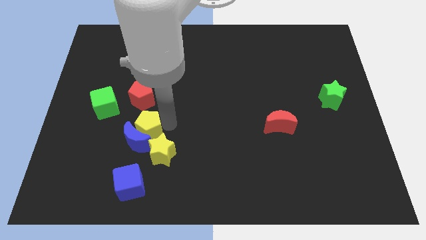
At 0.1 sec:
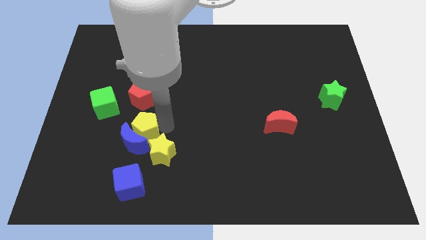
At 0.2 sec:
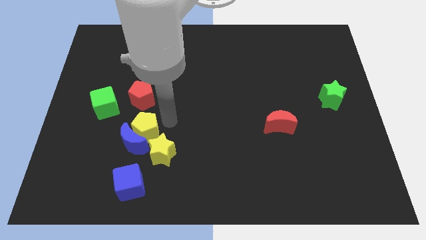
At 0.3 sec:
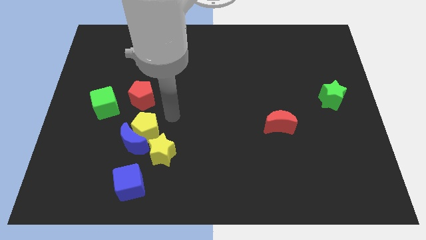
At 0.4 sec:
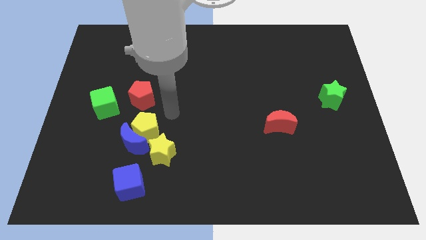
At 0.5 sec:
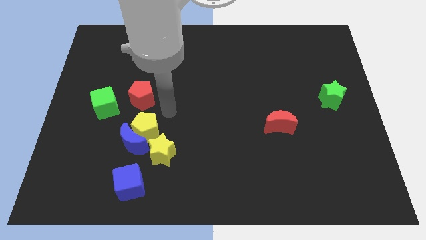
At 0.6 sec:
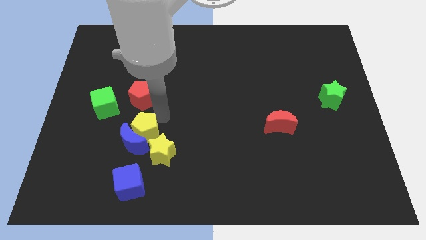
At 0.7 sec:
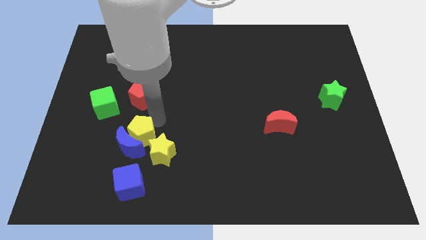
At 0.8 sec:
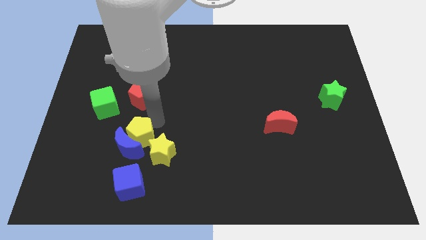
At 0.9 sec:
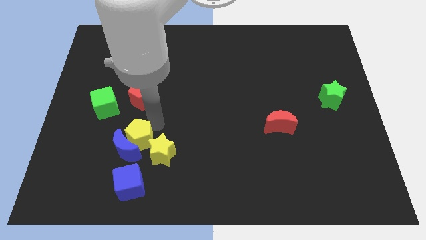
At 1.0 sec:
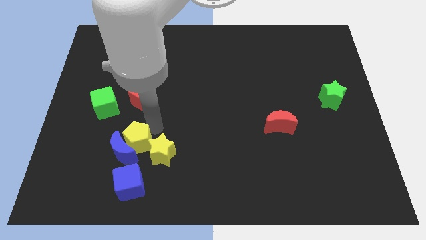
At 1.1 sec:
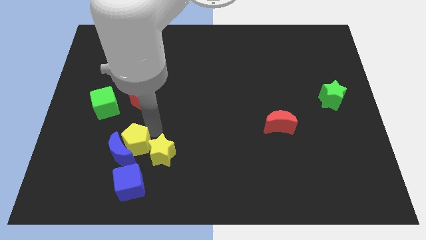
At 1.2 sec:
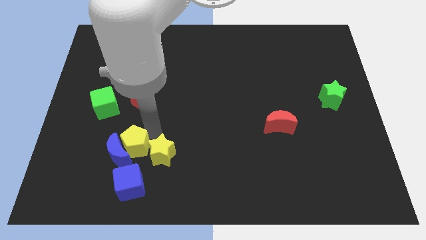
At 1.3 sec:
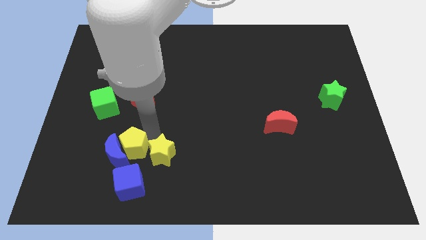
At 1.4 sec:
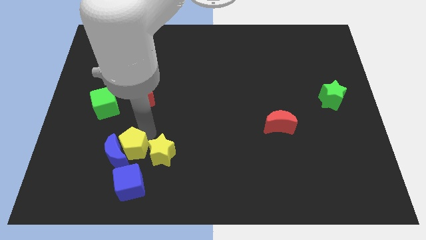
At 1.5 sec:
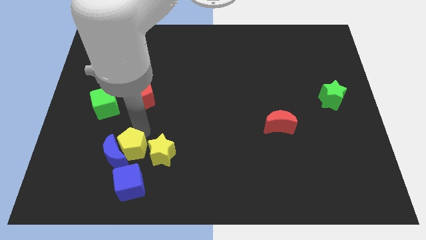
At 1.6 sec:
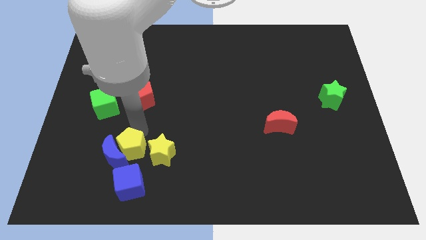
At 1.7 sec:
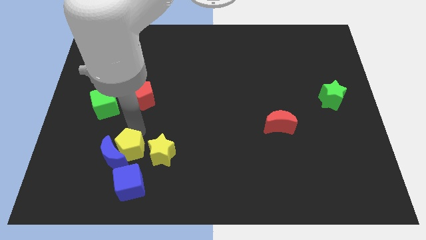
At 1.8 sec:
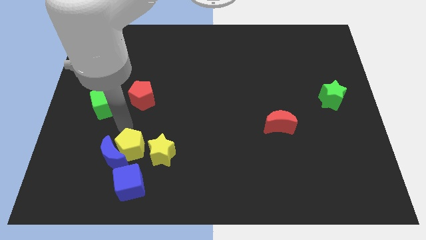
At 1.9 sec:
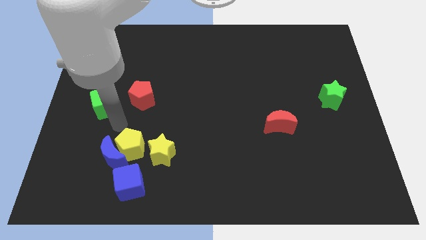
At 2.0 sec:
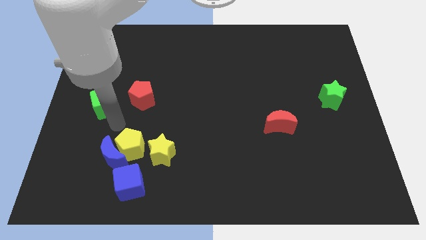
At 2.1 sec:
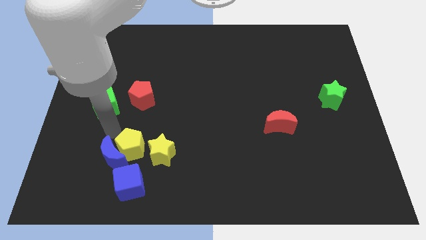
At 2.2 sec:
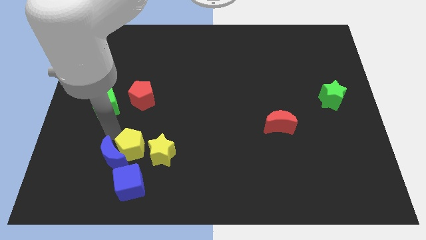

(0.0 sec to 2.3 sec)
place the blue moon and the yellow pentagon on top of blue cube

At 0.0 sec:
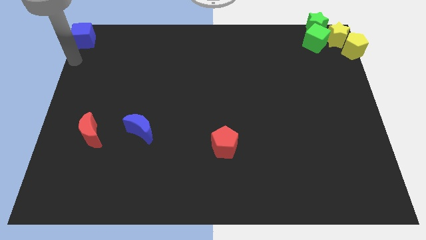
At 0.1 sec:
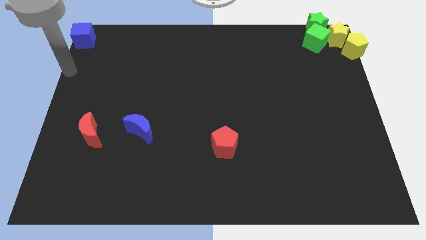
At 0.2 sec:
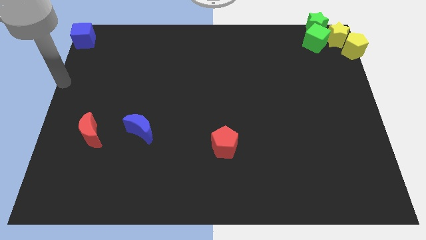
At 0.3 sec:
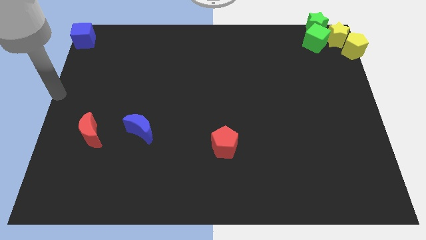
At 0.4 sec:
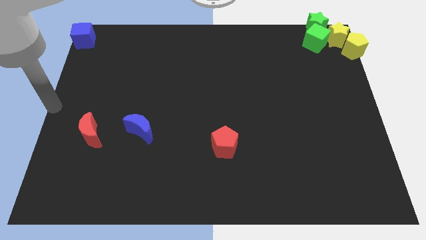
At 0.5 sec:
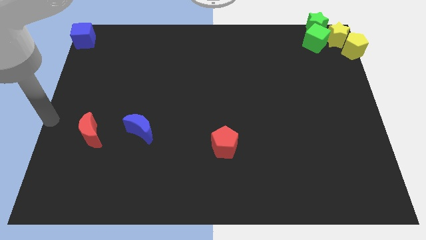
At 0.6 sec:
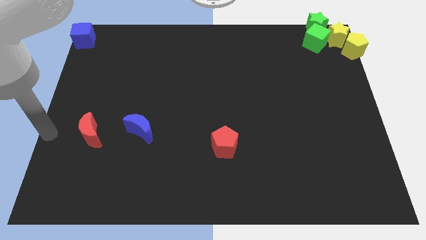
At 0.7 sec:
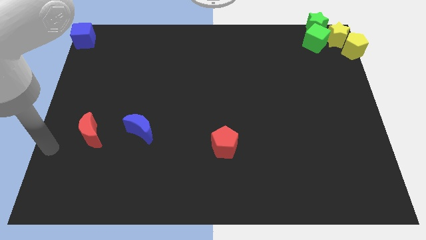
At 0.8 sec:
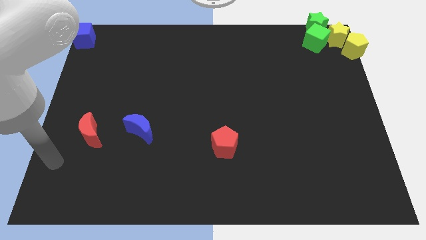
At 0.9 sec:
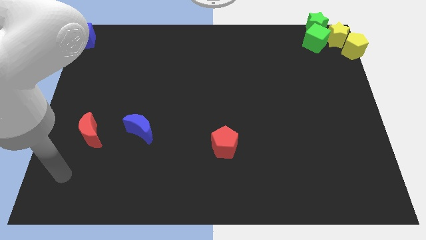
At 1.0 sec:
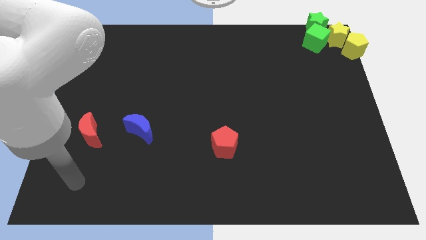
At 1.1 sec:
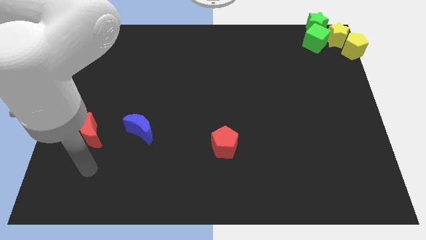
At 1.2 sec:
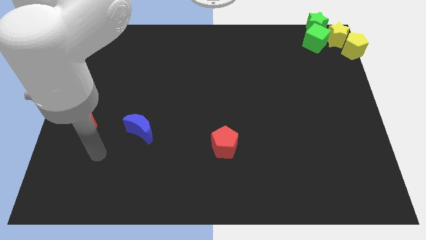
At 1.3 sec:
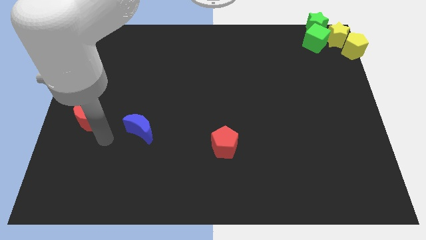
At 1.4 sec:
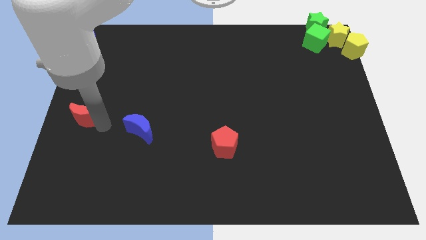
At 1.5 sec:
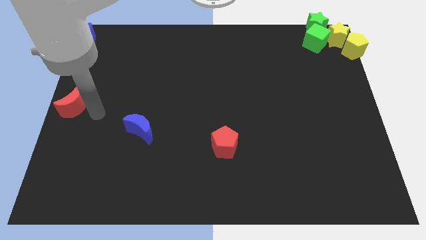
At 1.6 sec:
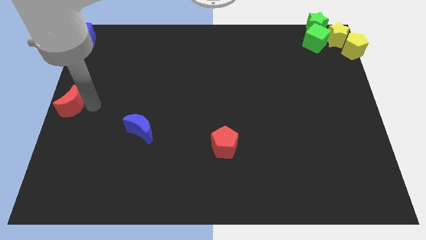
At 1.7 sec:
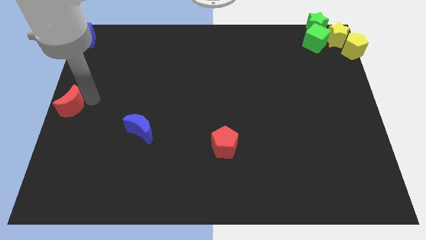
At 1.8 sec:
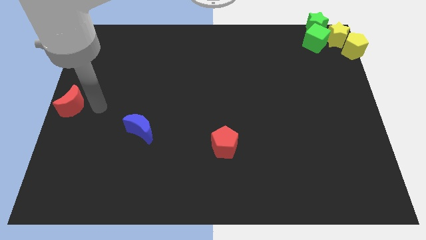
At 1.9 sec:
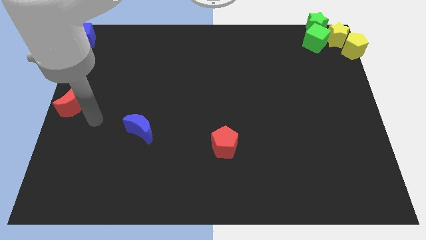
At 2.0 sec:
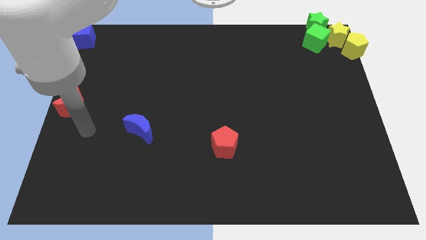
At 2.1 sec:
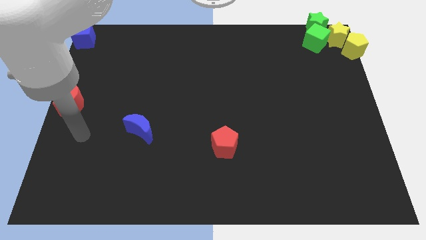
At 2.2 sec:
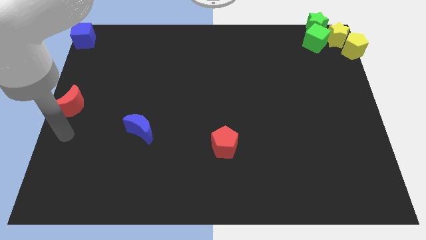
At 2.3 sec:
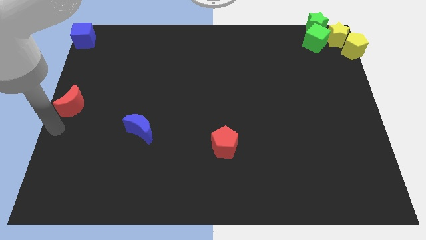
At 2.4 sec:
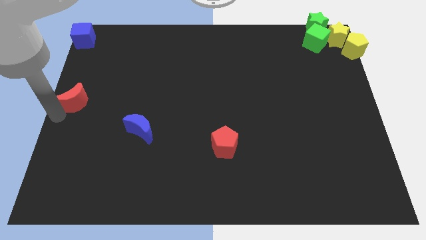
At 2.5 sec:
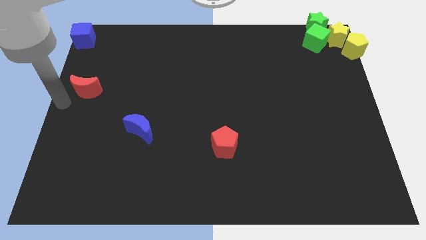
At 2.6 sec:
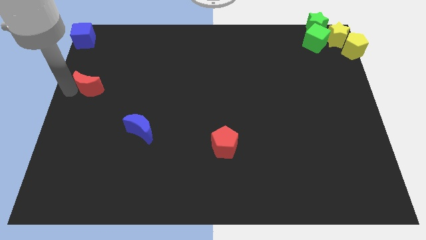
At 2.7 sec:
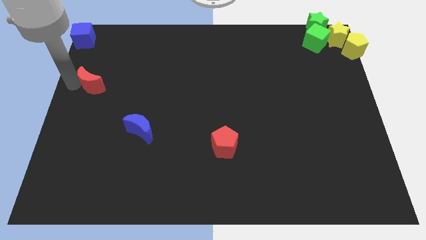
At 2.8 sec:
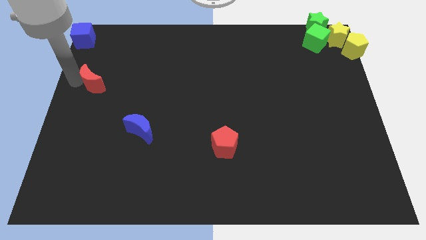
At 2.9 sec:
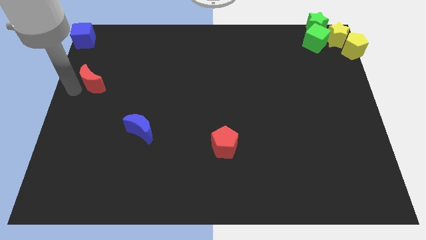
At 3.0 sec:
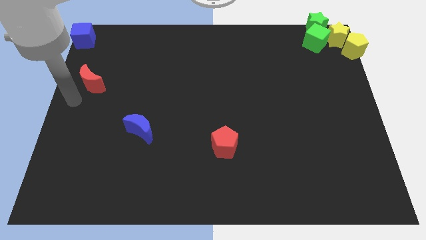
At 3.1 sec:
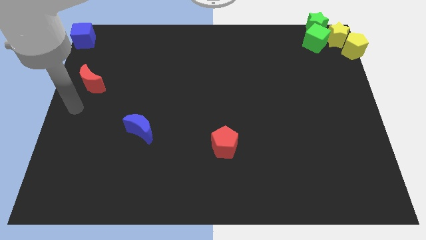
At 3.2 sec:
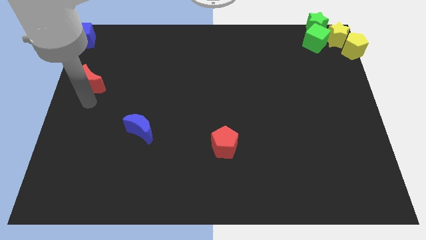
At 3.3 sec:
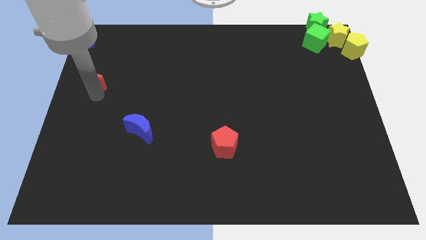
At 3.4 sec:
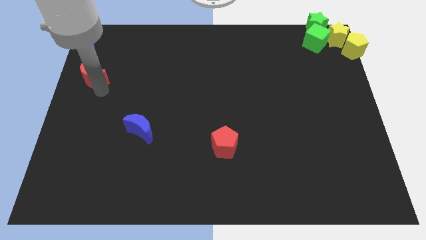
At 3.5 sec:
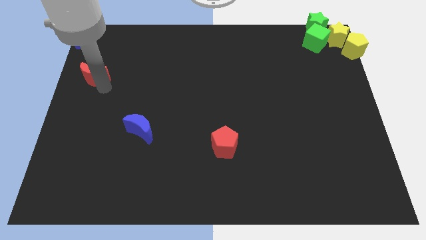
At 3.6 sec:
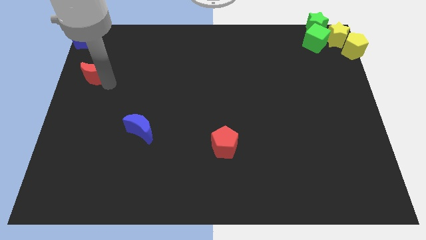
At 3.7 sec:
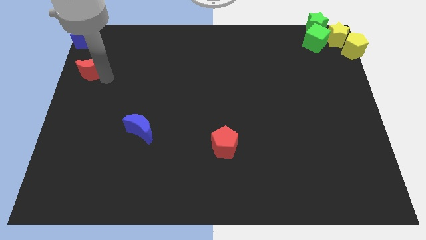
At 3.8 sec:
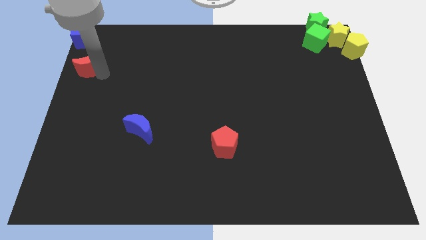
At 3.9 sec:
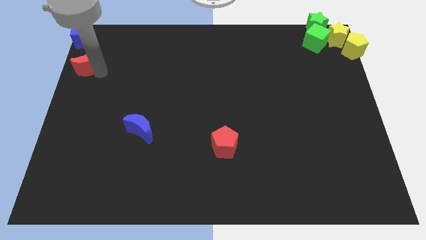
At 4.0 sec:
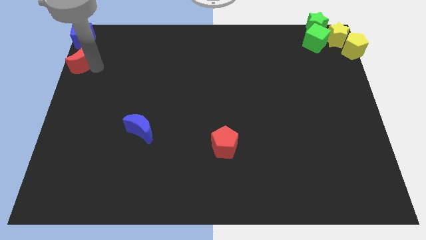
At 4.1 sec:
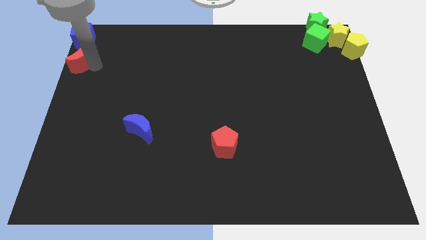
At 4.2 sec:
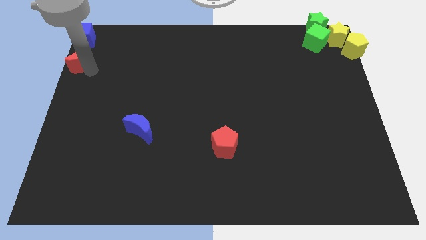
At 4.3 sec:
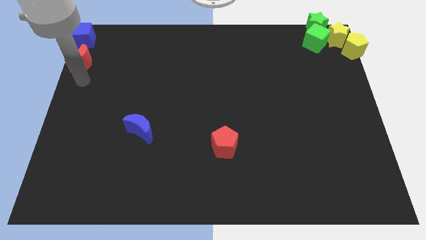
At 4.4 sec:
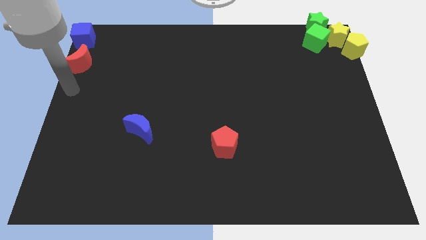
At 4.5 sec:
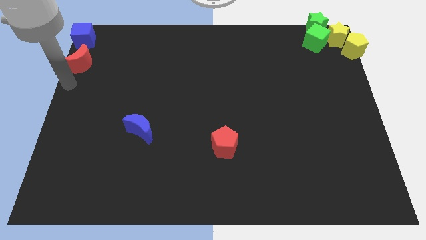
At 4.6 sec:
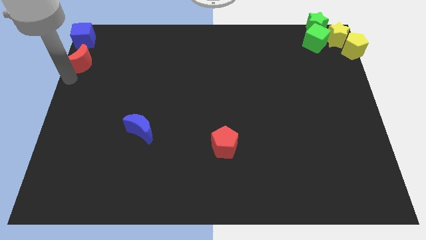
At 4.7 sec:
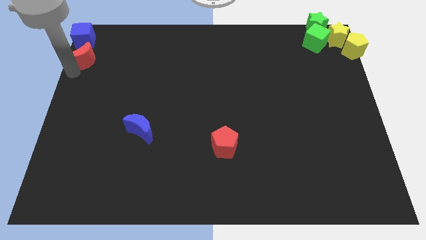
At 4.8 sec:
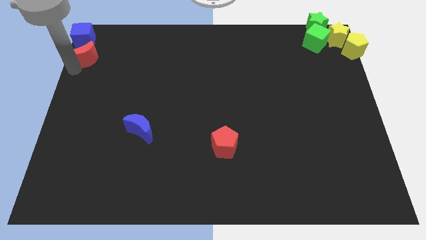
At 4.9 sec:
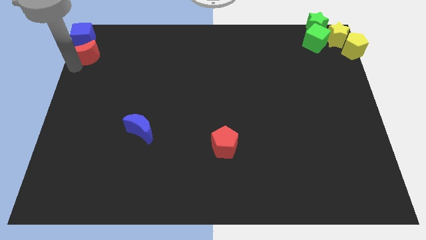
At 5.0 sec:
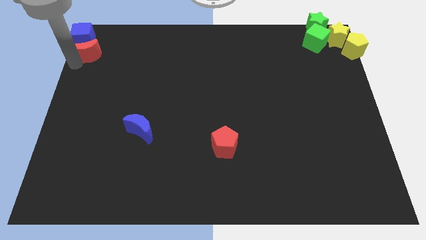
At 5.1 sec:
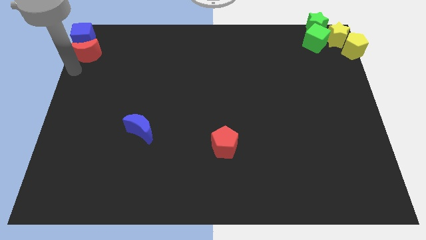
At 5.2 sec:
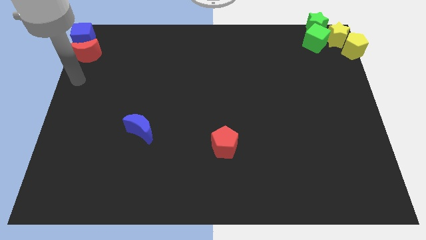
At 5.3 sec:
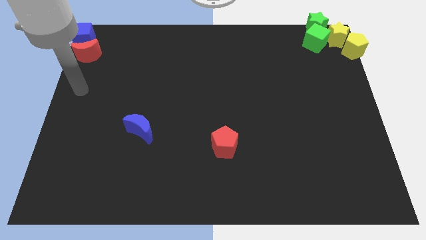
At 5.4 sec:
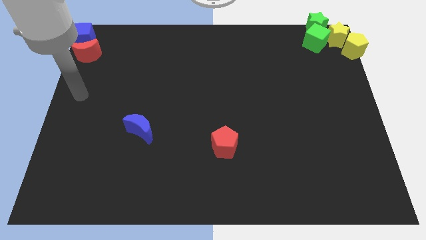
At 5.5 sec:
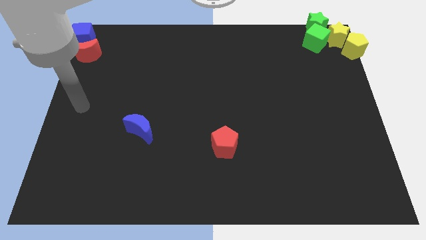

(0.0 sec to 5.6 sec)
push the red crescent below the blue cube

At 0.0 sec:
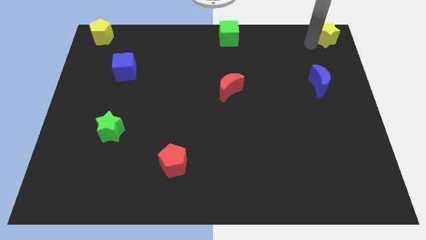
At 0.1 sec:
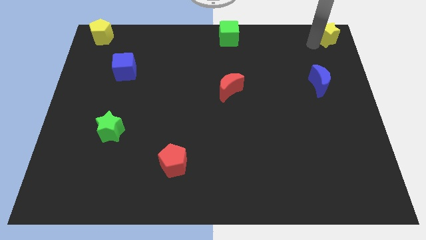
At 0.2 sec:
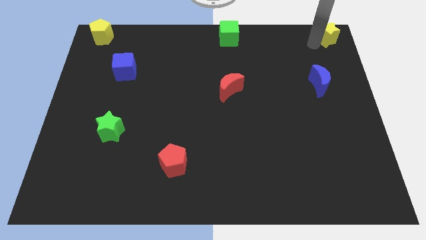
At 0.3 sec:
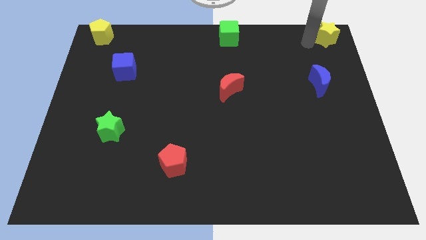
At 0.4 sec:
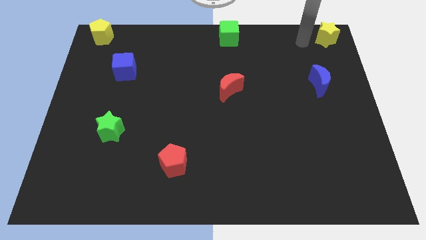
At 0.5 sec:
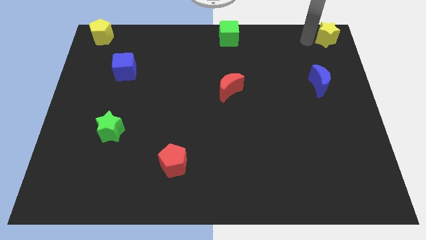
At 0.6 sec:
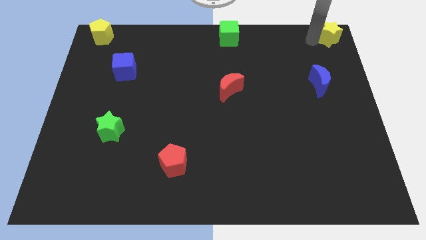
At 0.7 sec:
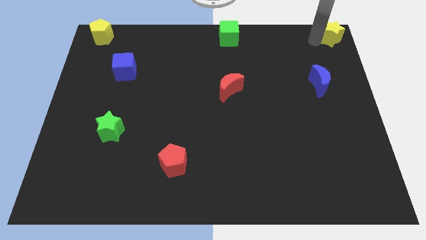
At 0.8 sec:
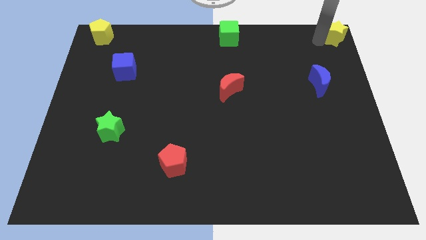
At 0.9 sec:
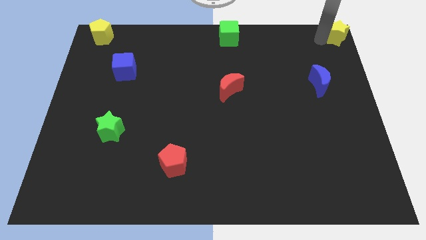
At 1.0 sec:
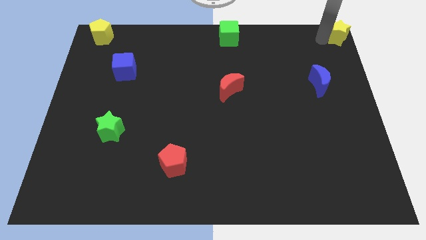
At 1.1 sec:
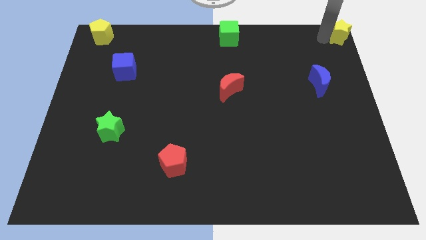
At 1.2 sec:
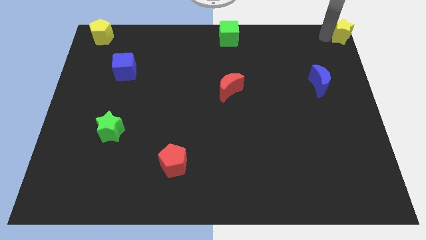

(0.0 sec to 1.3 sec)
move the yellow star to the top right corner of the board
